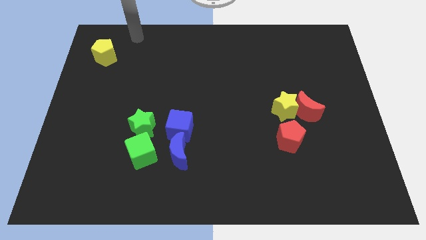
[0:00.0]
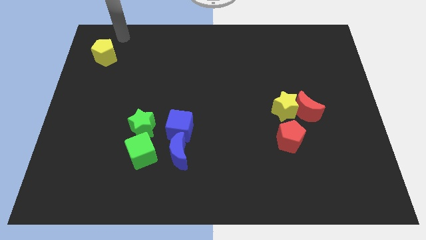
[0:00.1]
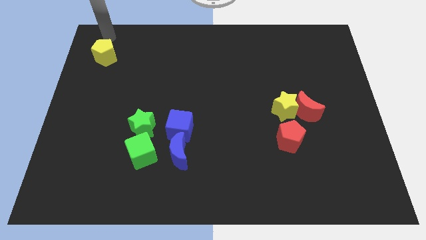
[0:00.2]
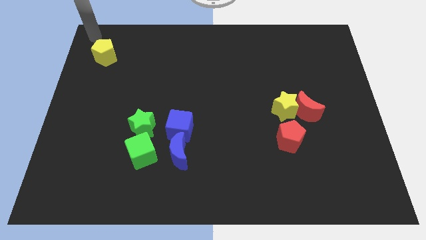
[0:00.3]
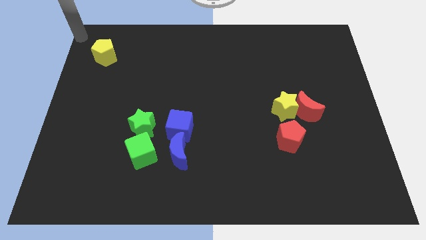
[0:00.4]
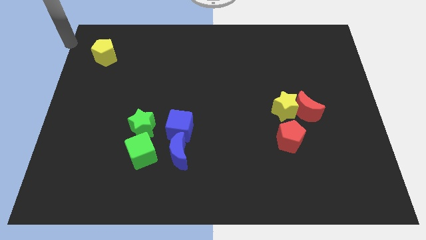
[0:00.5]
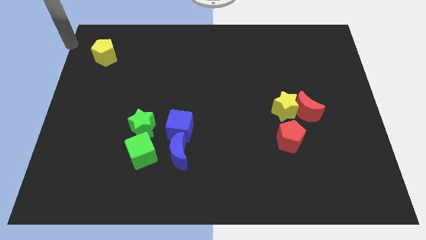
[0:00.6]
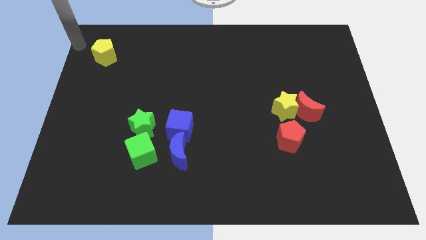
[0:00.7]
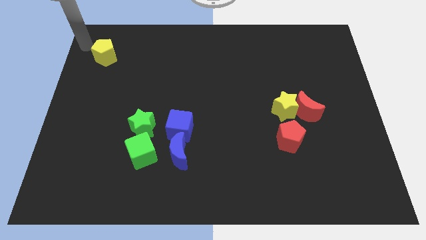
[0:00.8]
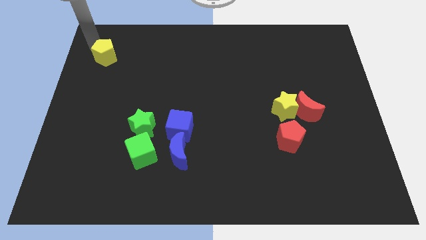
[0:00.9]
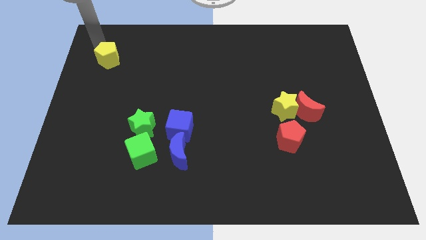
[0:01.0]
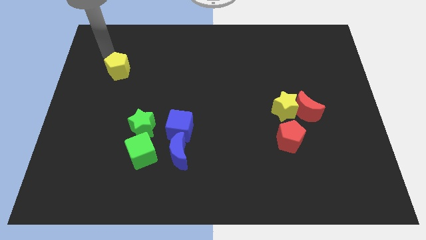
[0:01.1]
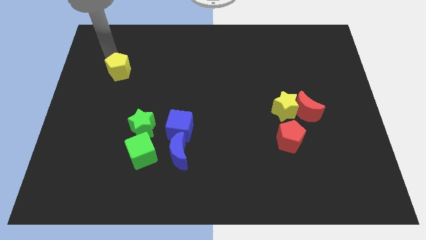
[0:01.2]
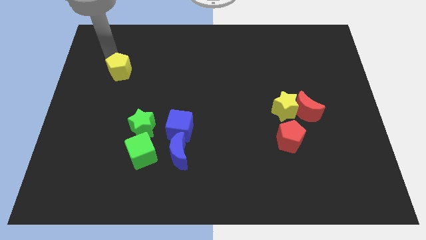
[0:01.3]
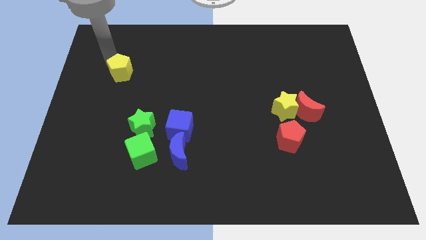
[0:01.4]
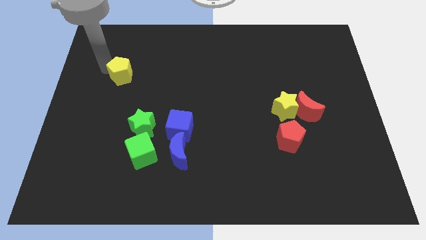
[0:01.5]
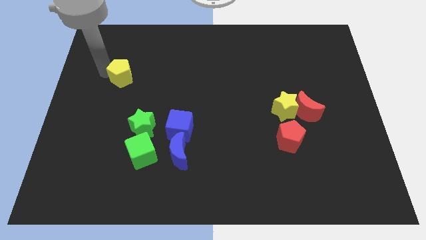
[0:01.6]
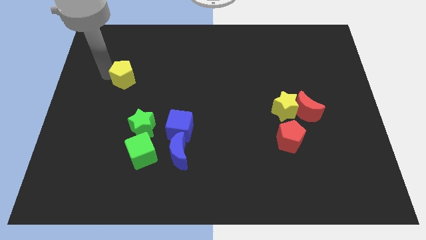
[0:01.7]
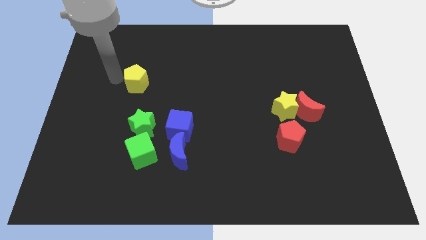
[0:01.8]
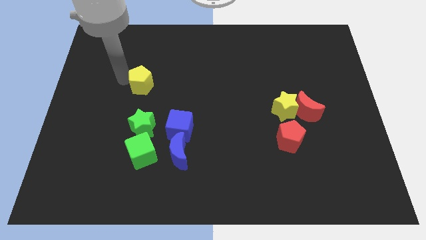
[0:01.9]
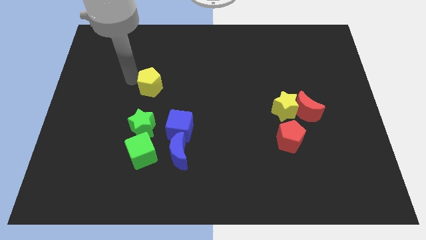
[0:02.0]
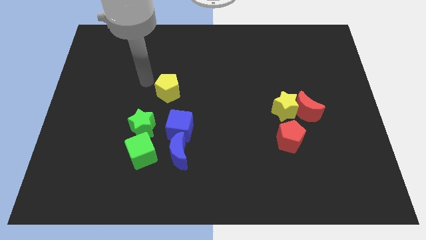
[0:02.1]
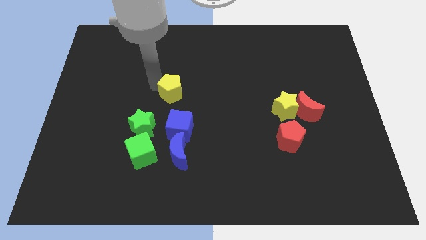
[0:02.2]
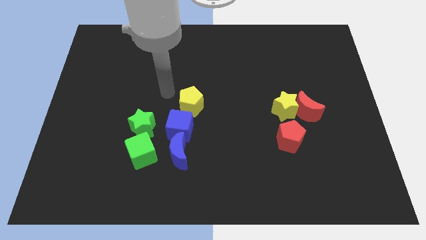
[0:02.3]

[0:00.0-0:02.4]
push the yellow pentagon to the top side of the blue cube

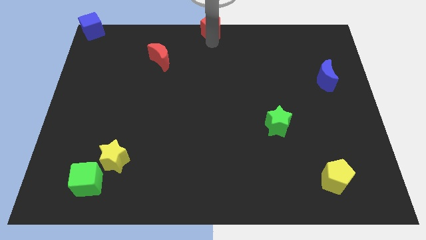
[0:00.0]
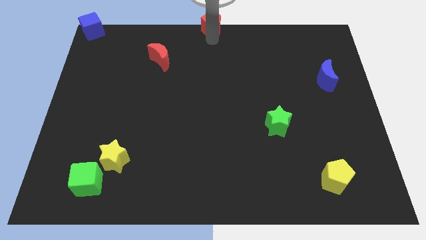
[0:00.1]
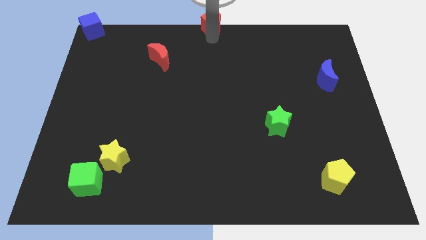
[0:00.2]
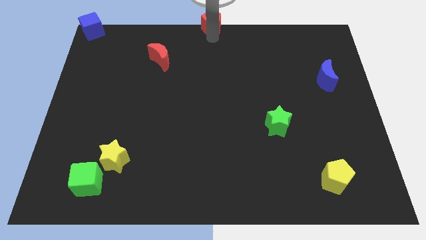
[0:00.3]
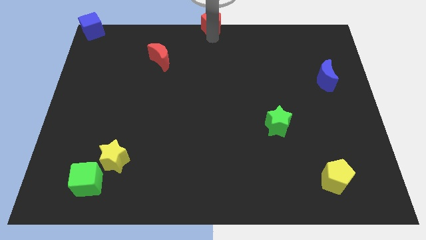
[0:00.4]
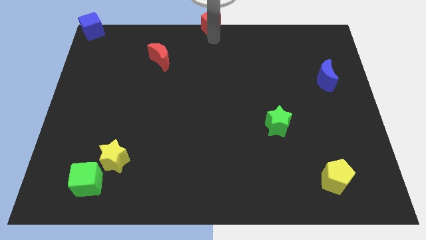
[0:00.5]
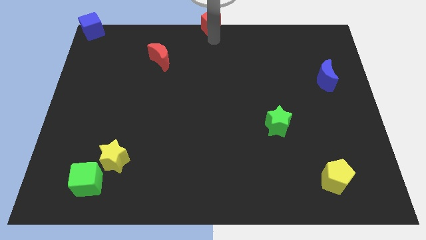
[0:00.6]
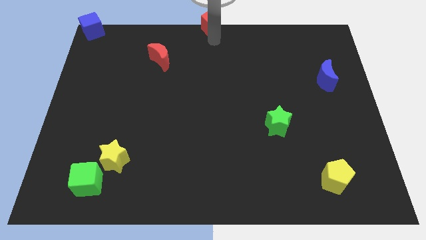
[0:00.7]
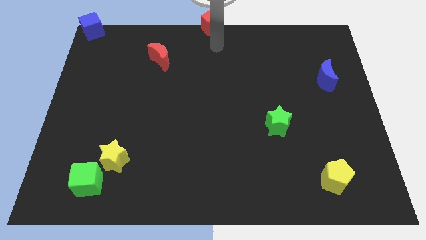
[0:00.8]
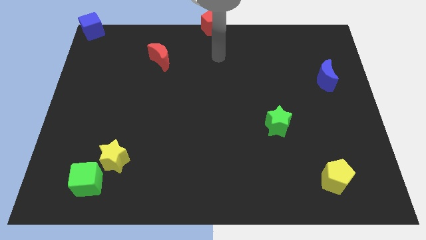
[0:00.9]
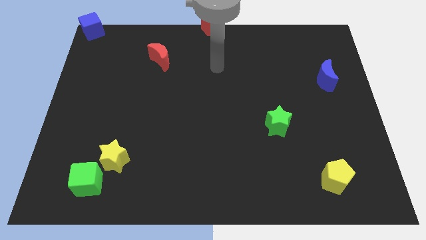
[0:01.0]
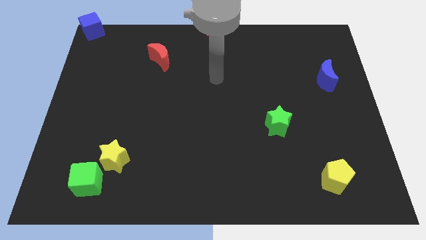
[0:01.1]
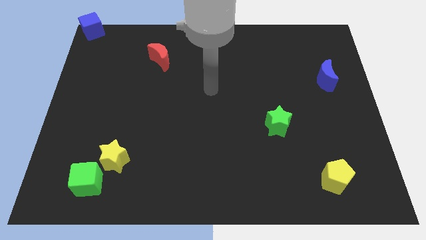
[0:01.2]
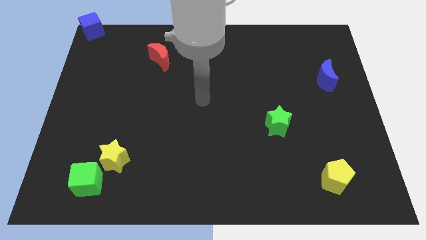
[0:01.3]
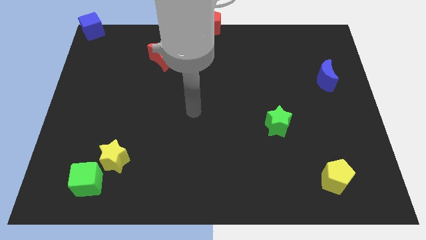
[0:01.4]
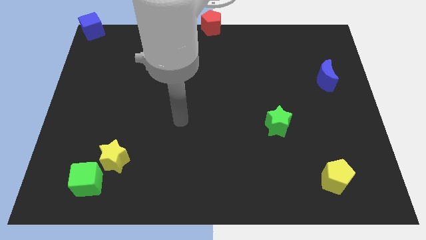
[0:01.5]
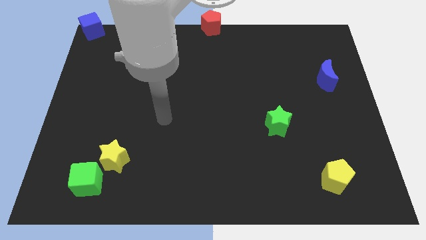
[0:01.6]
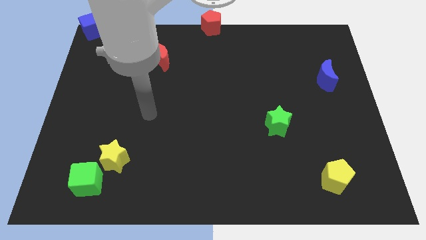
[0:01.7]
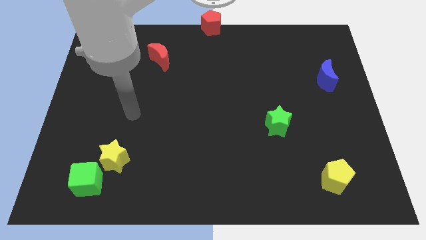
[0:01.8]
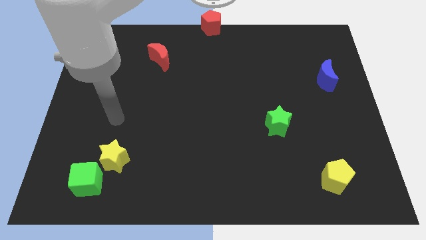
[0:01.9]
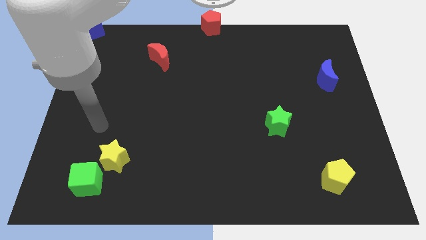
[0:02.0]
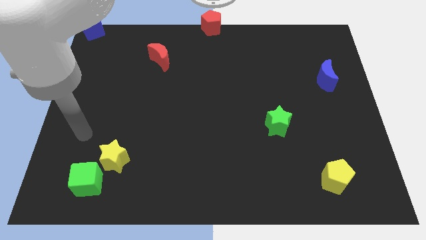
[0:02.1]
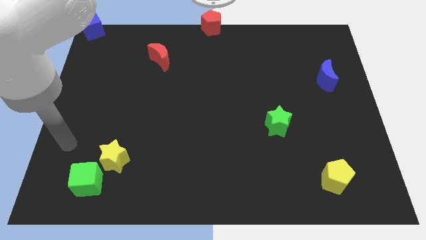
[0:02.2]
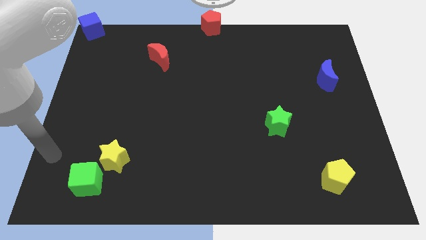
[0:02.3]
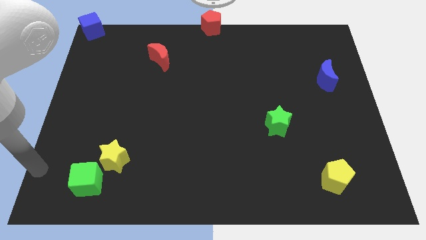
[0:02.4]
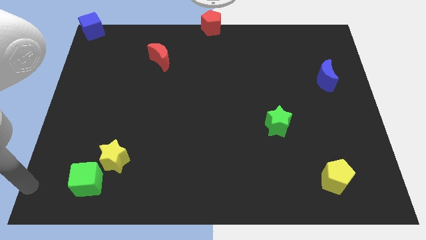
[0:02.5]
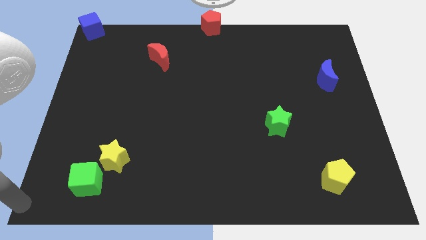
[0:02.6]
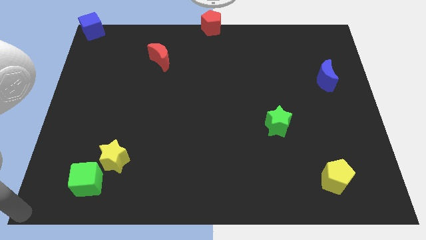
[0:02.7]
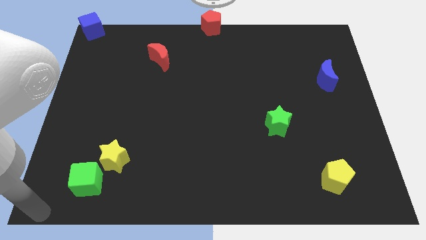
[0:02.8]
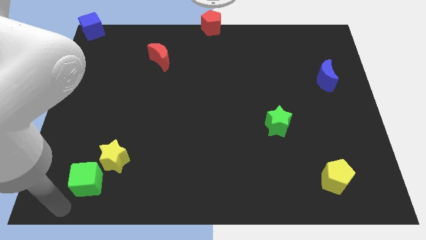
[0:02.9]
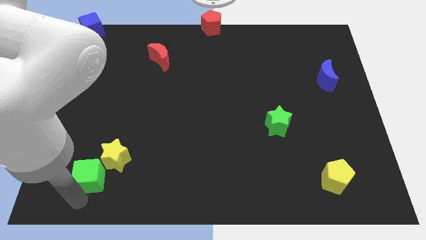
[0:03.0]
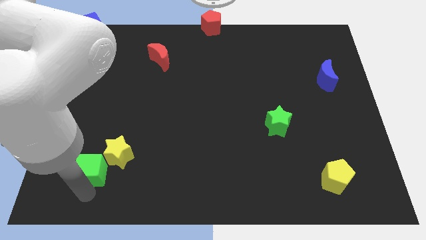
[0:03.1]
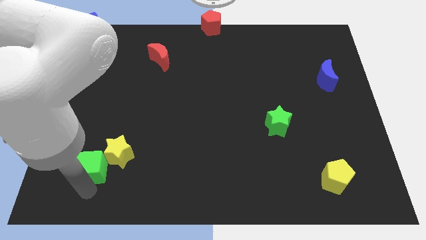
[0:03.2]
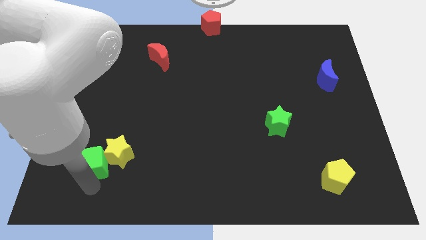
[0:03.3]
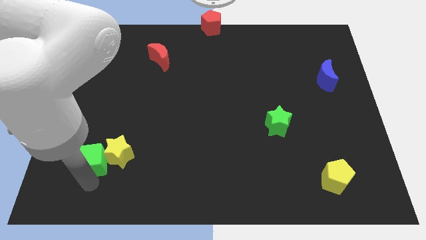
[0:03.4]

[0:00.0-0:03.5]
move your arm to the bottom of the green cube

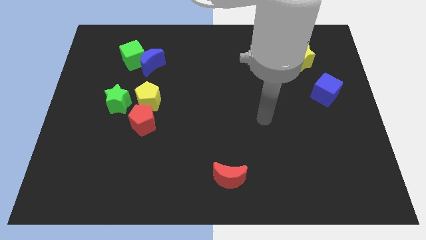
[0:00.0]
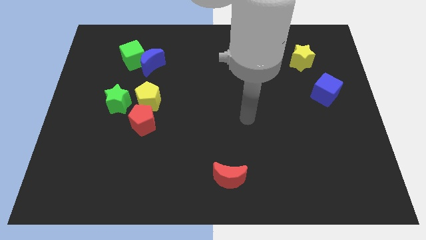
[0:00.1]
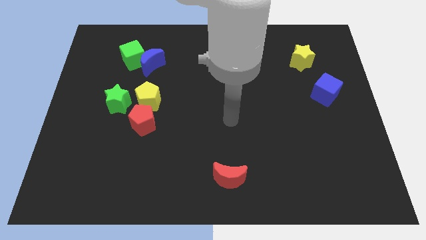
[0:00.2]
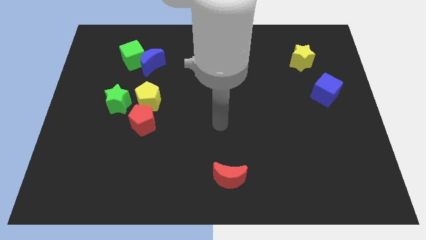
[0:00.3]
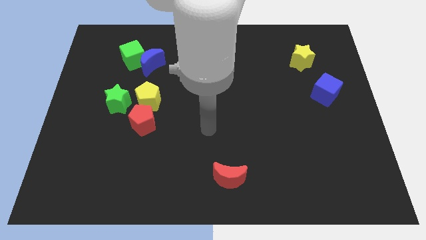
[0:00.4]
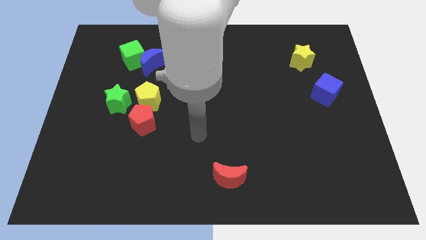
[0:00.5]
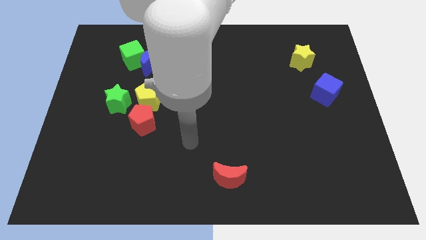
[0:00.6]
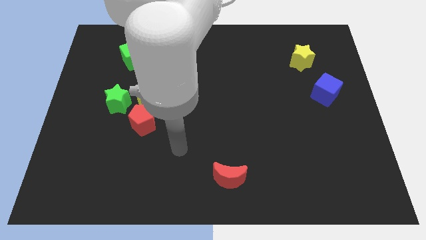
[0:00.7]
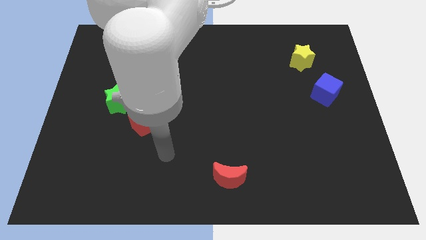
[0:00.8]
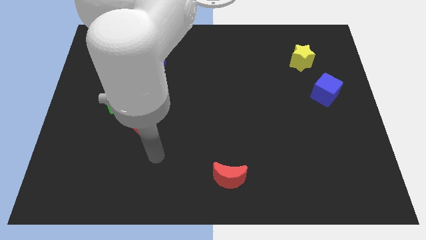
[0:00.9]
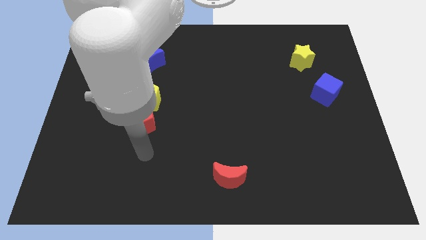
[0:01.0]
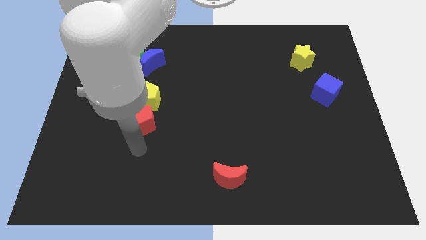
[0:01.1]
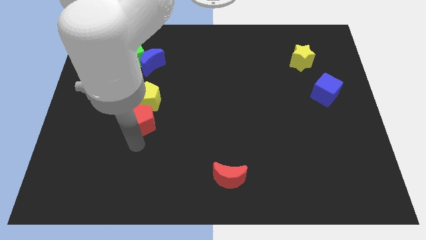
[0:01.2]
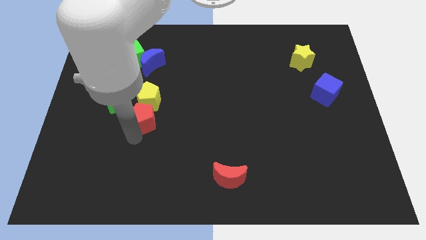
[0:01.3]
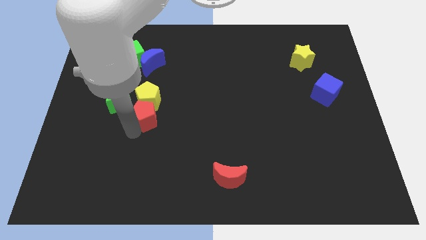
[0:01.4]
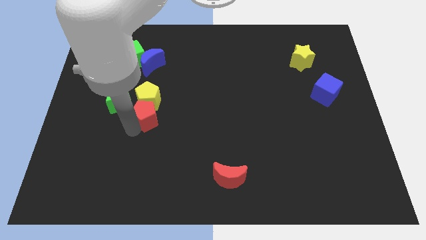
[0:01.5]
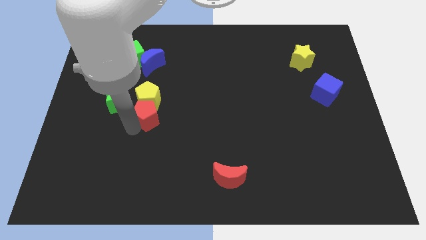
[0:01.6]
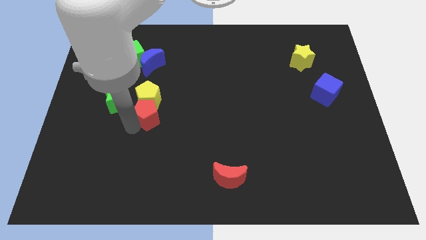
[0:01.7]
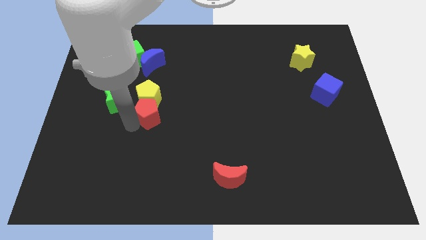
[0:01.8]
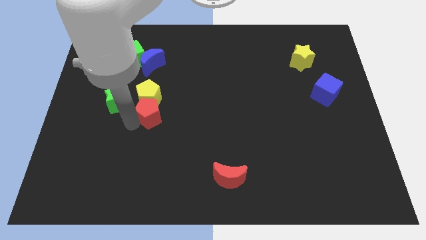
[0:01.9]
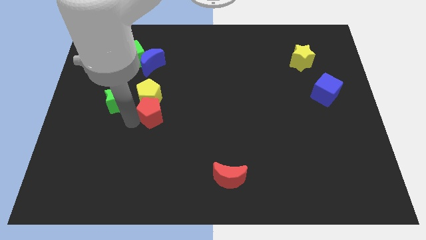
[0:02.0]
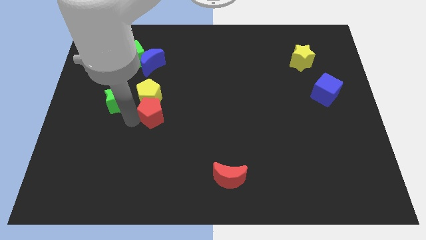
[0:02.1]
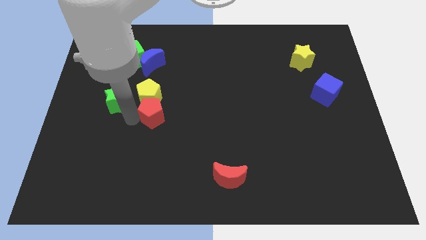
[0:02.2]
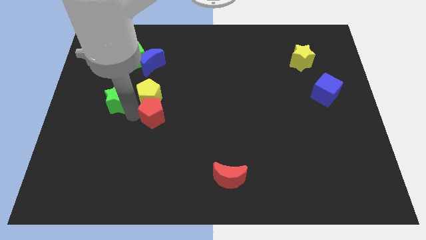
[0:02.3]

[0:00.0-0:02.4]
move the red pentagon into the yellow pentagon

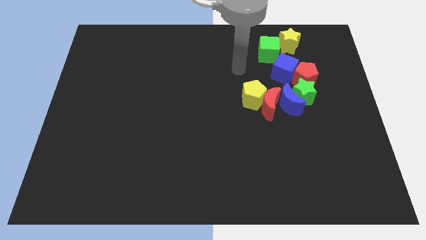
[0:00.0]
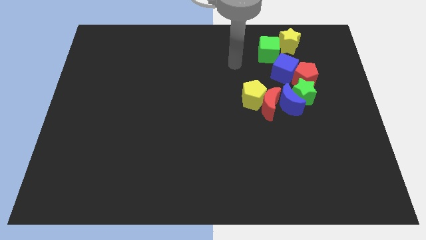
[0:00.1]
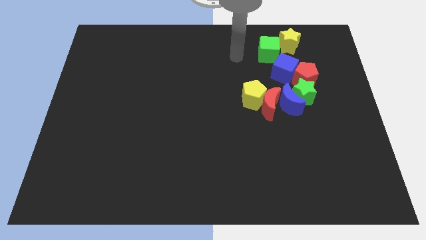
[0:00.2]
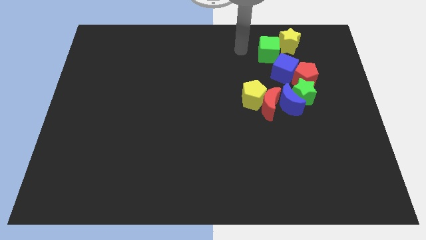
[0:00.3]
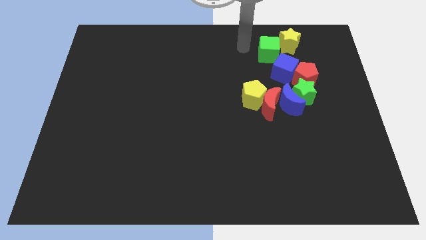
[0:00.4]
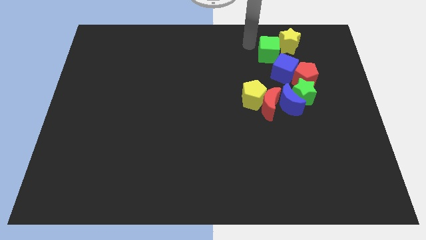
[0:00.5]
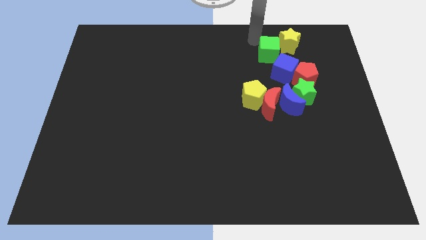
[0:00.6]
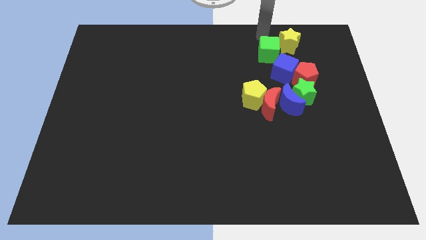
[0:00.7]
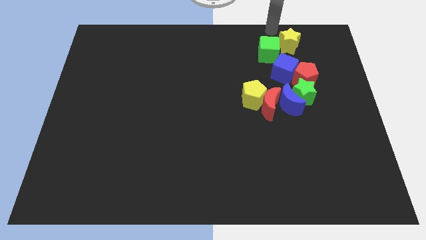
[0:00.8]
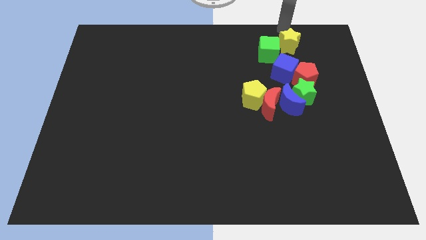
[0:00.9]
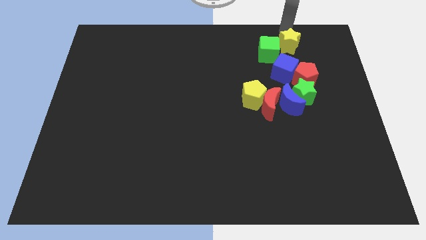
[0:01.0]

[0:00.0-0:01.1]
point the arm above the yellow star
